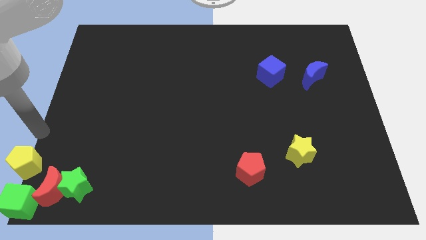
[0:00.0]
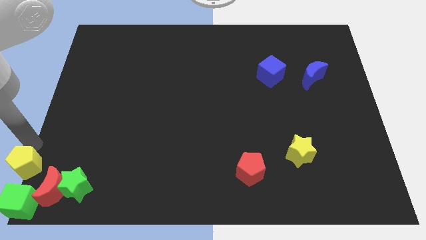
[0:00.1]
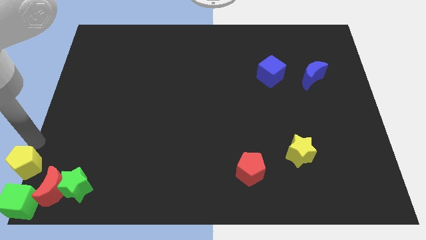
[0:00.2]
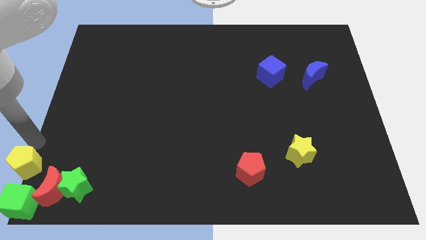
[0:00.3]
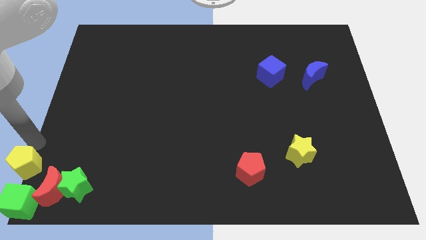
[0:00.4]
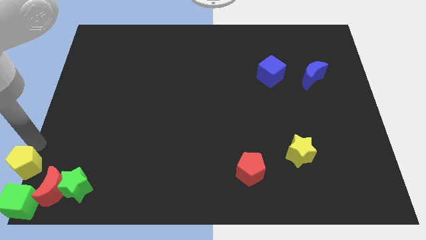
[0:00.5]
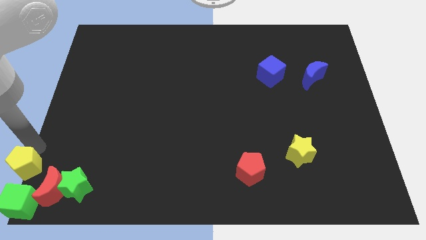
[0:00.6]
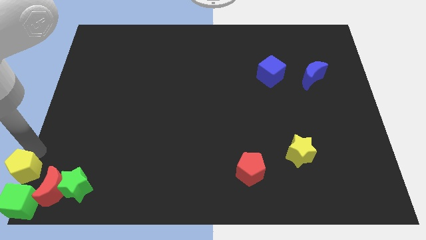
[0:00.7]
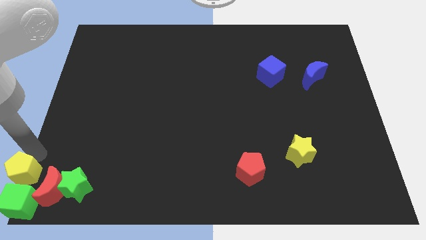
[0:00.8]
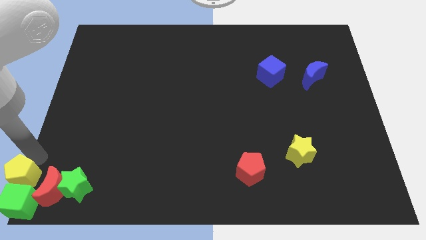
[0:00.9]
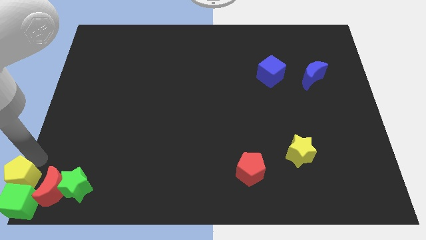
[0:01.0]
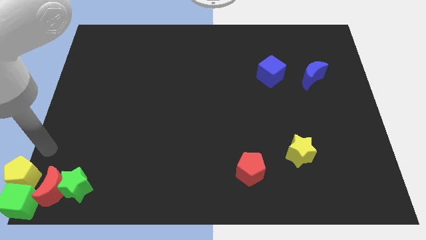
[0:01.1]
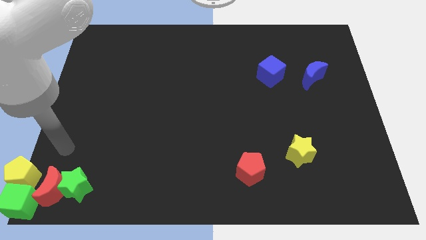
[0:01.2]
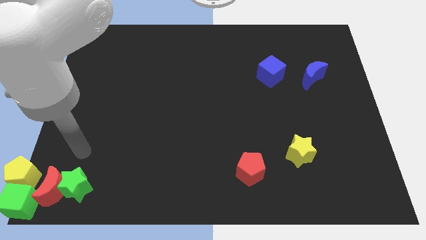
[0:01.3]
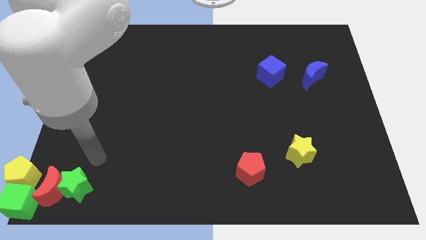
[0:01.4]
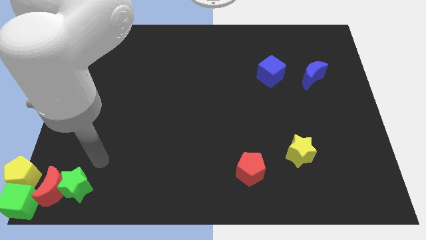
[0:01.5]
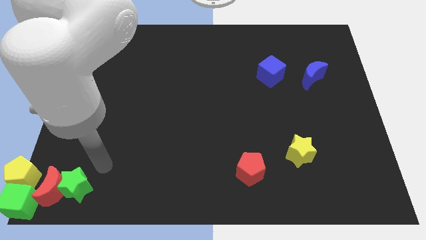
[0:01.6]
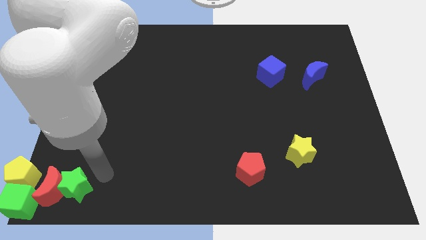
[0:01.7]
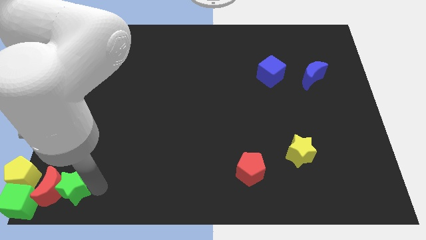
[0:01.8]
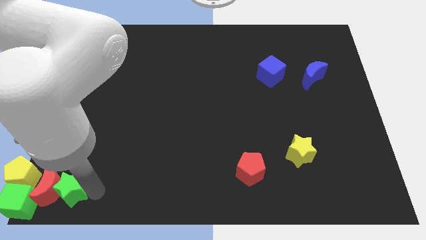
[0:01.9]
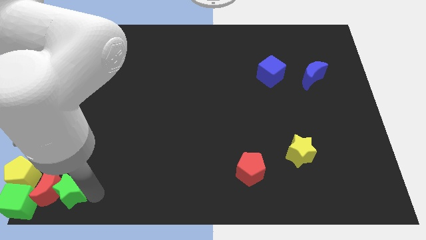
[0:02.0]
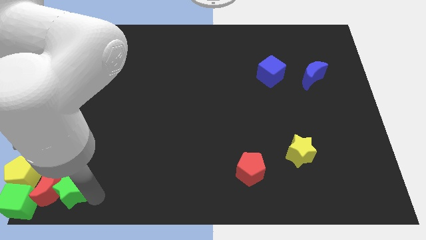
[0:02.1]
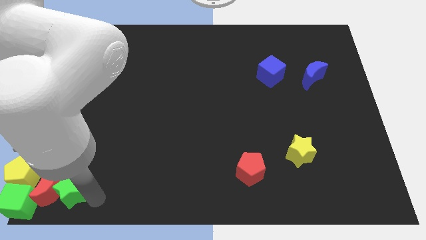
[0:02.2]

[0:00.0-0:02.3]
move the green star to the blocks on the bottom left

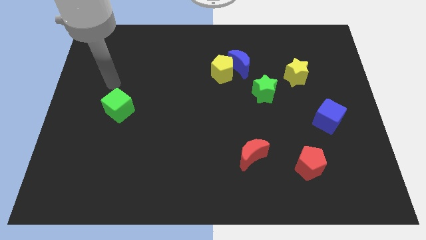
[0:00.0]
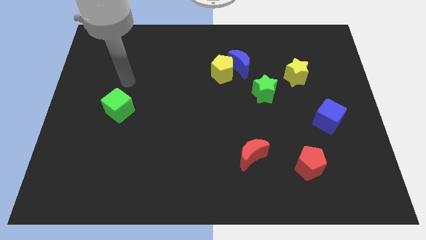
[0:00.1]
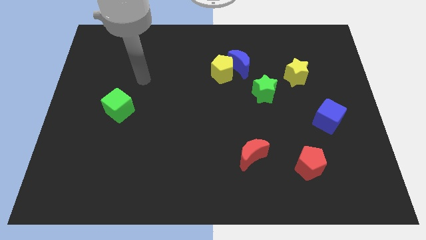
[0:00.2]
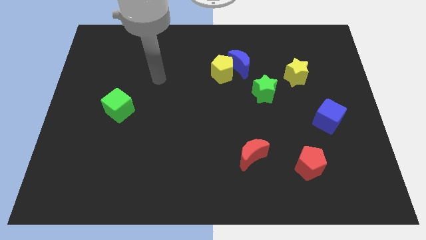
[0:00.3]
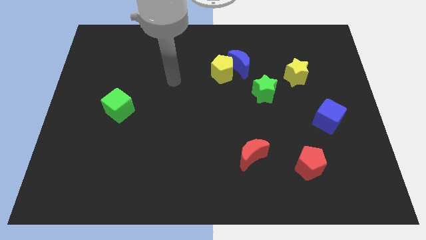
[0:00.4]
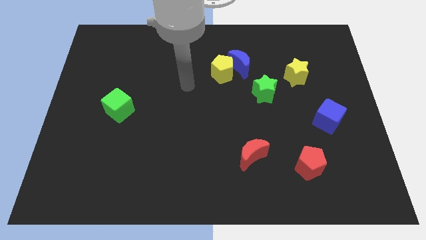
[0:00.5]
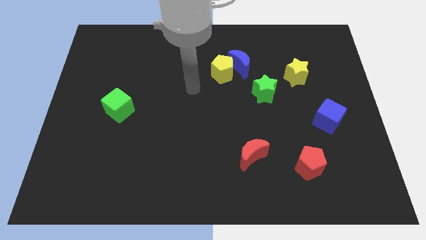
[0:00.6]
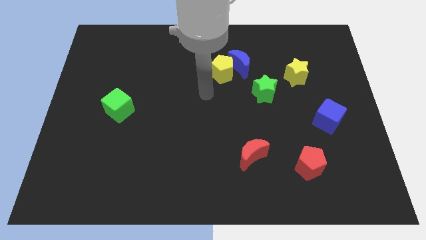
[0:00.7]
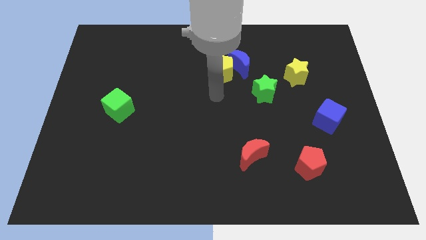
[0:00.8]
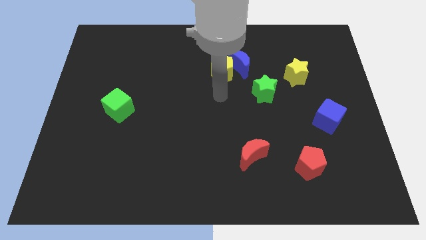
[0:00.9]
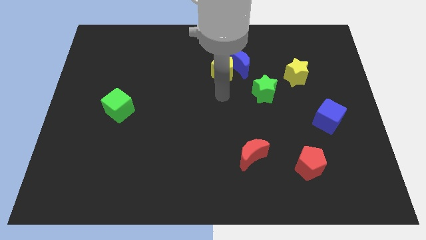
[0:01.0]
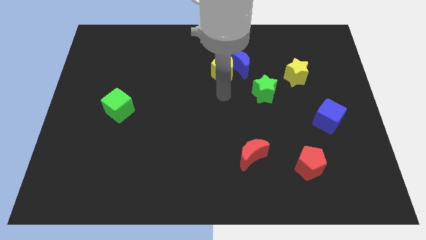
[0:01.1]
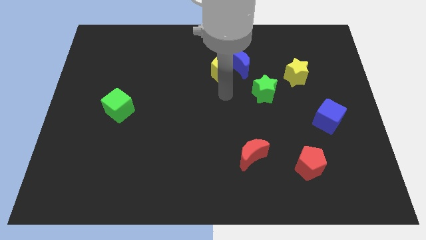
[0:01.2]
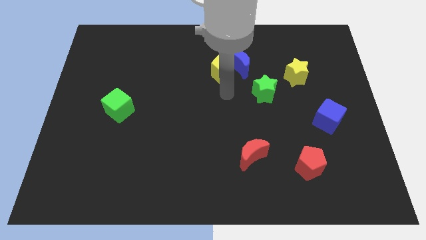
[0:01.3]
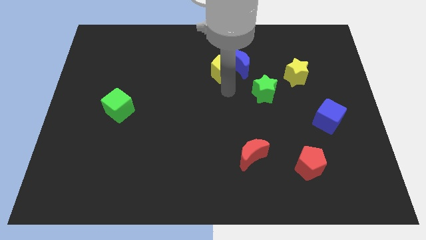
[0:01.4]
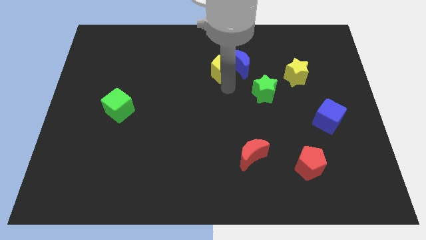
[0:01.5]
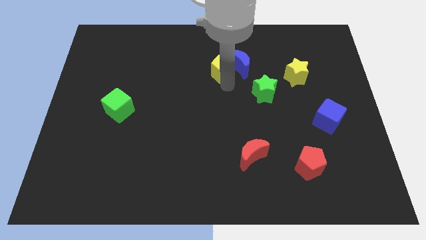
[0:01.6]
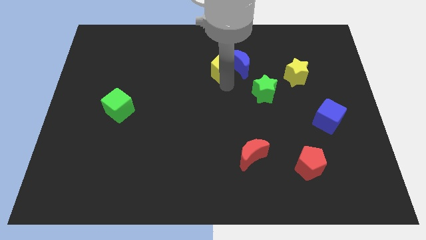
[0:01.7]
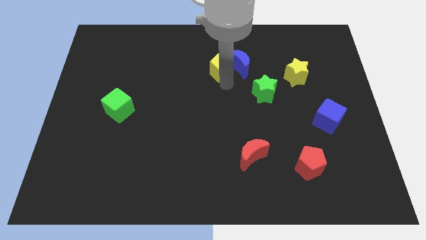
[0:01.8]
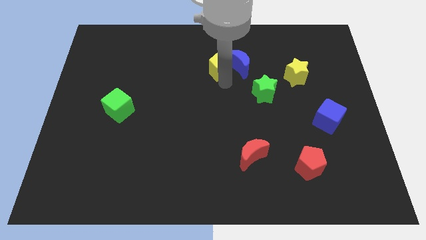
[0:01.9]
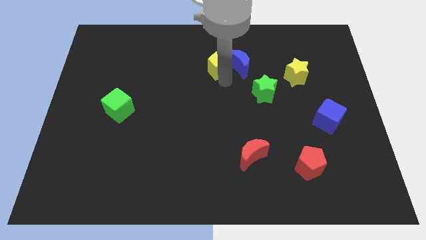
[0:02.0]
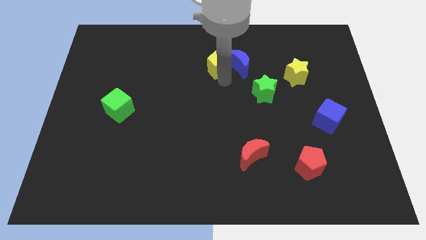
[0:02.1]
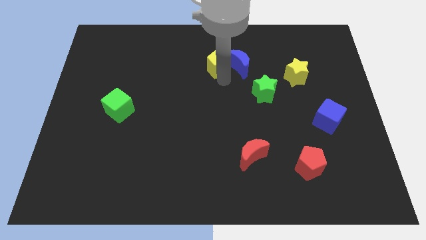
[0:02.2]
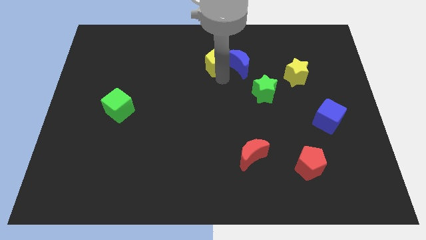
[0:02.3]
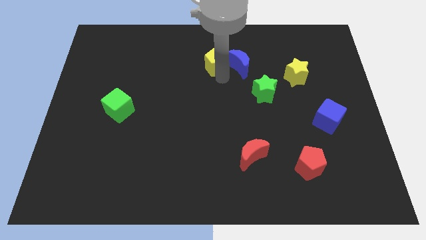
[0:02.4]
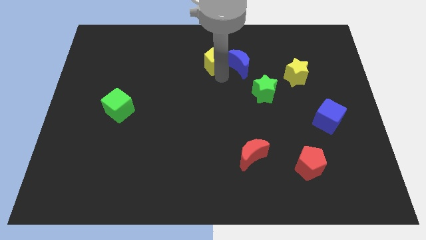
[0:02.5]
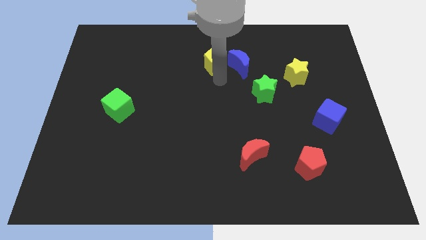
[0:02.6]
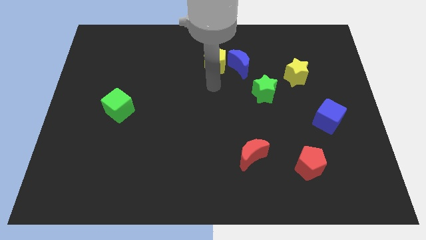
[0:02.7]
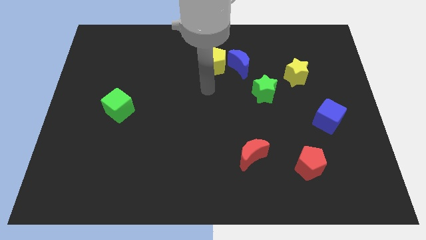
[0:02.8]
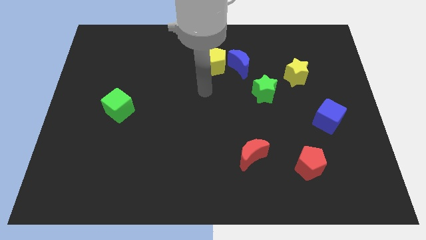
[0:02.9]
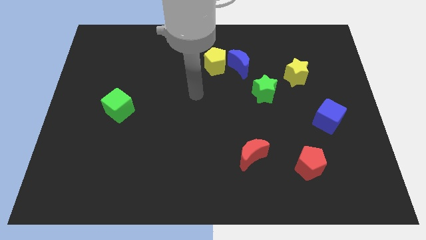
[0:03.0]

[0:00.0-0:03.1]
slightly move yellow pentagon from the blue crescent

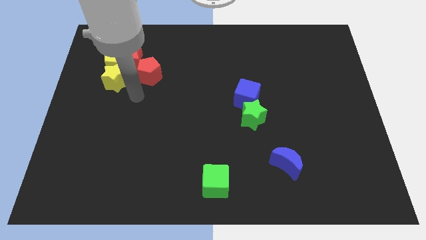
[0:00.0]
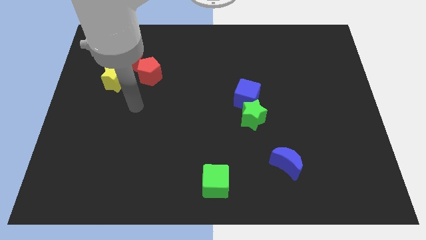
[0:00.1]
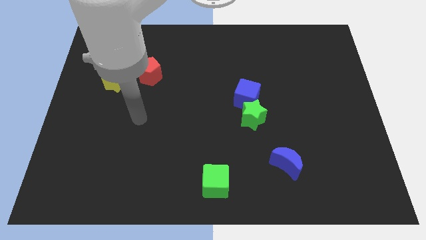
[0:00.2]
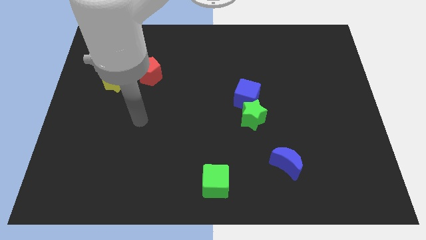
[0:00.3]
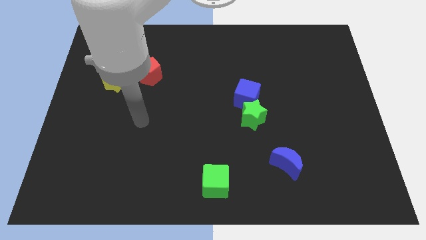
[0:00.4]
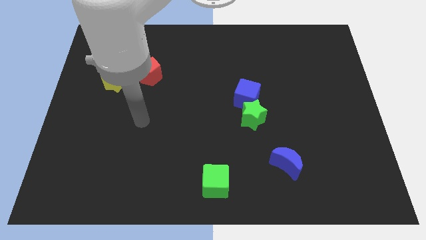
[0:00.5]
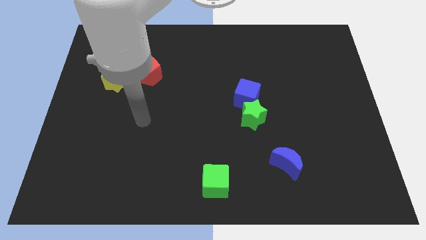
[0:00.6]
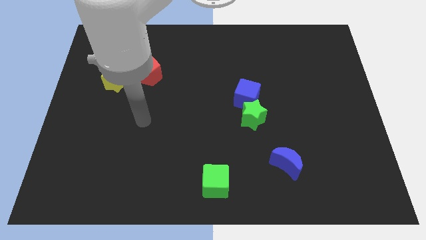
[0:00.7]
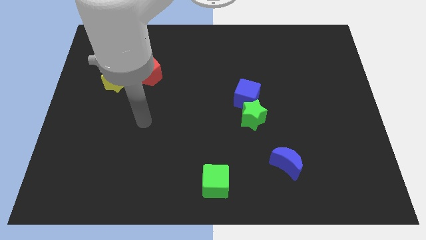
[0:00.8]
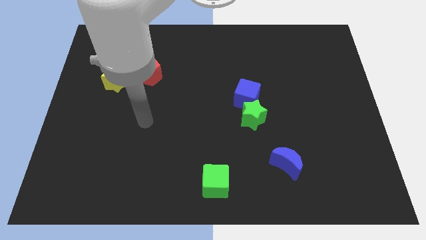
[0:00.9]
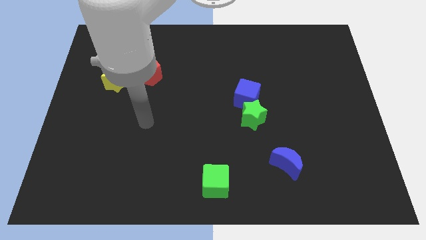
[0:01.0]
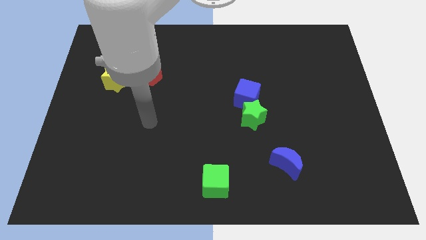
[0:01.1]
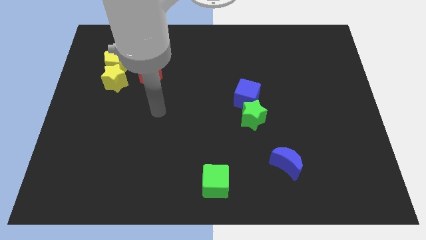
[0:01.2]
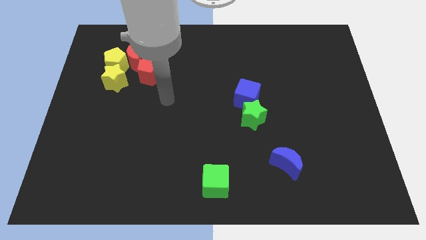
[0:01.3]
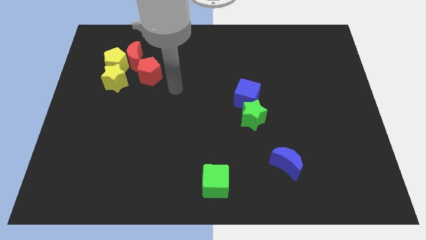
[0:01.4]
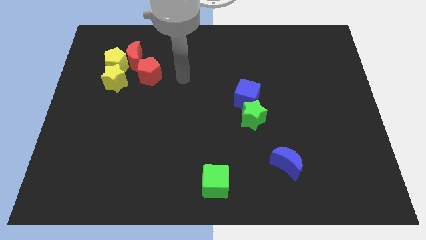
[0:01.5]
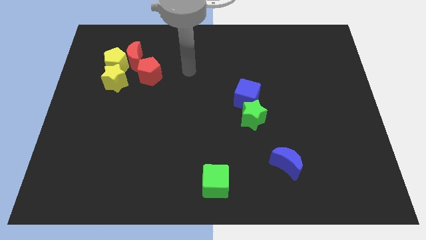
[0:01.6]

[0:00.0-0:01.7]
move away from the yellow star

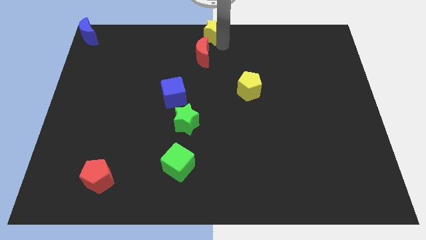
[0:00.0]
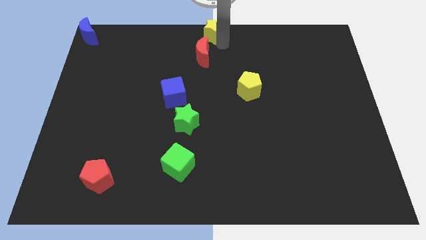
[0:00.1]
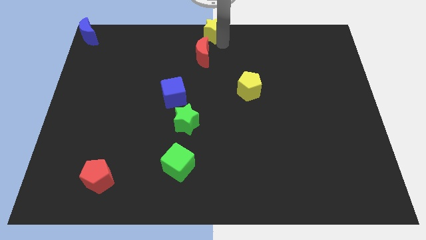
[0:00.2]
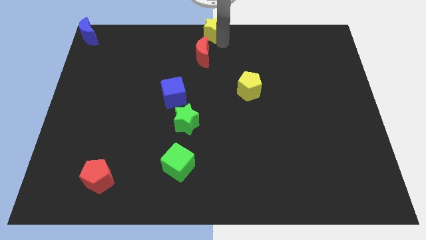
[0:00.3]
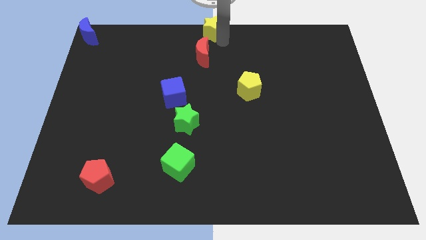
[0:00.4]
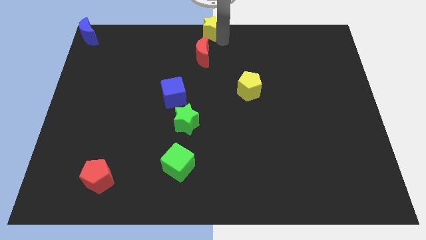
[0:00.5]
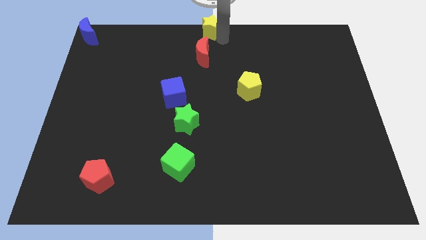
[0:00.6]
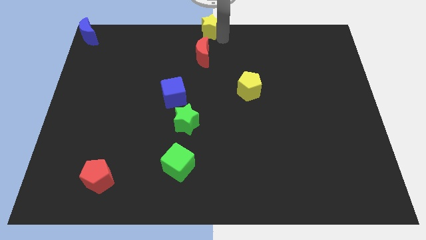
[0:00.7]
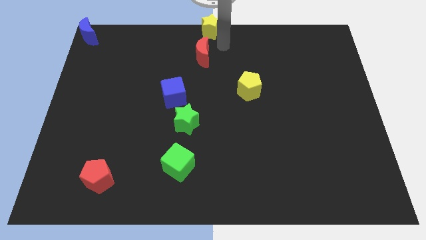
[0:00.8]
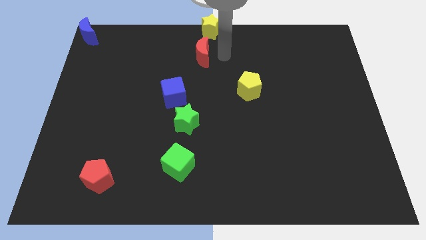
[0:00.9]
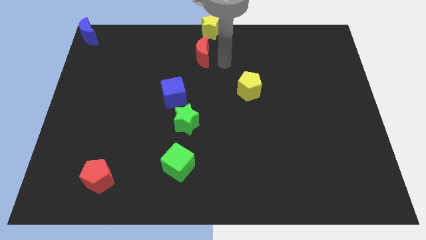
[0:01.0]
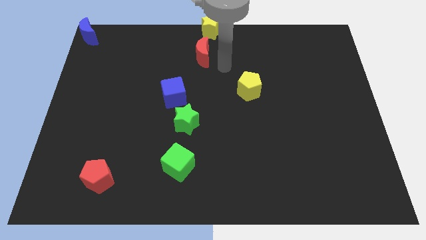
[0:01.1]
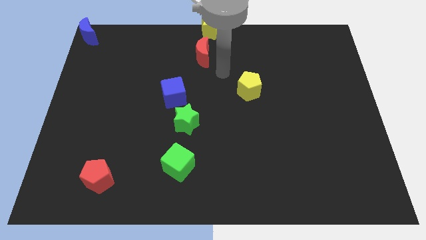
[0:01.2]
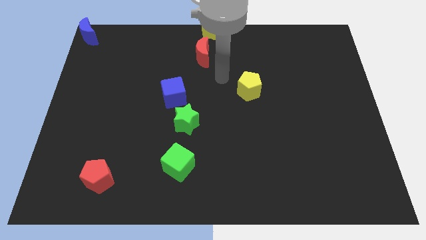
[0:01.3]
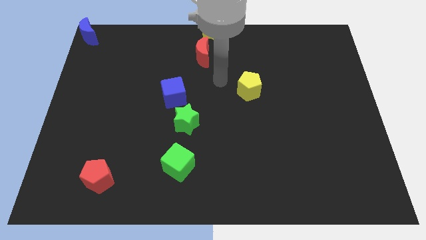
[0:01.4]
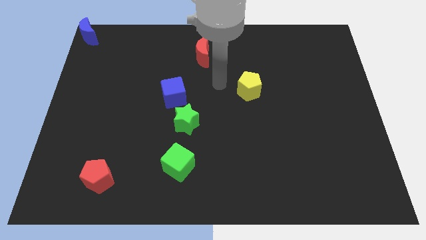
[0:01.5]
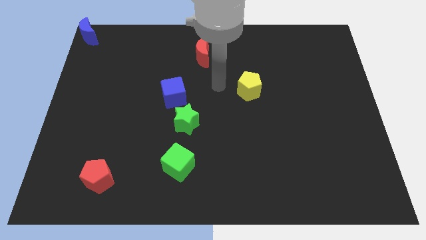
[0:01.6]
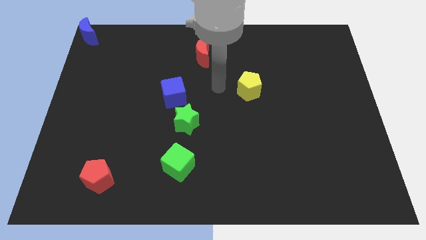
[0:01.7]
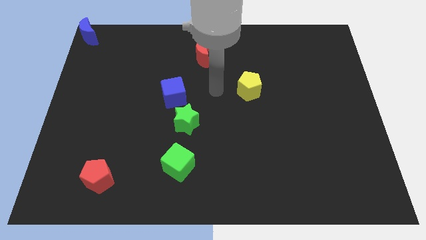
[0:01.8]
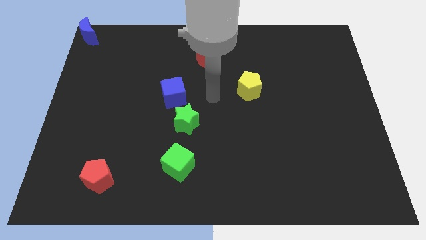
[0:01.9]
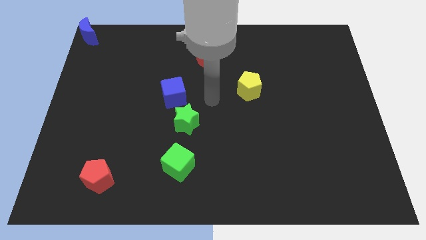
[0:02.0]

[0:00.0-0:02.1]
place the arm at the center of the board
